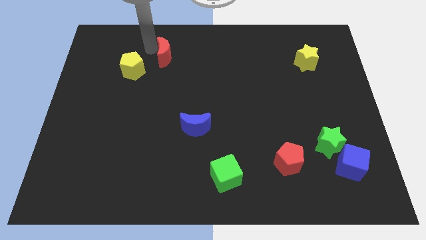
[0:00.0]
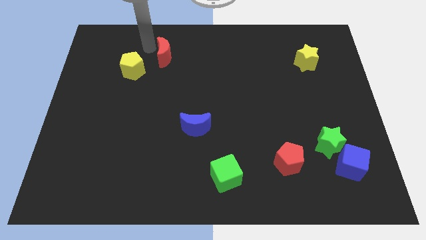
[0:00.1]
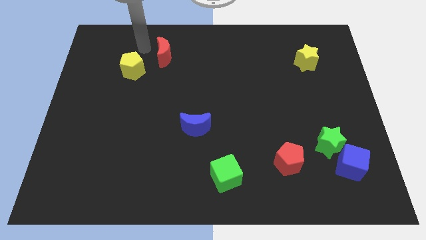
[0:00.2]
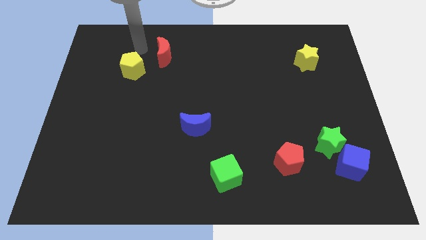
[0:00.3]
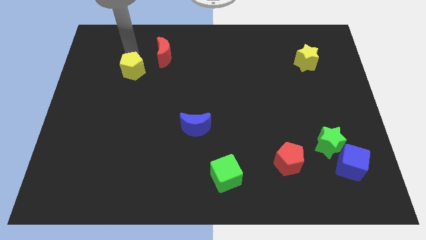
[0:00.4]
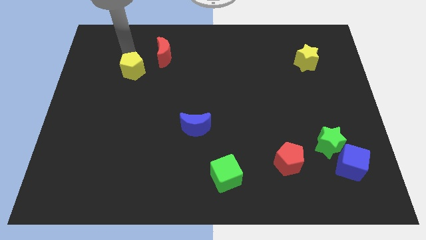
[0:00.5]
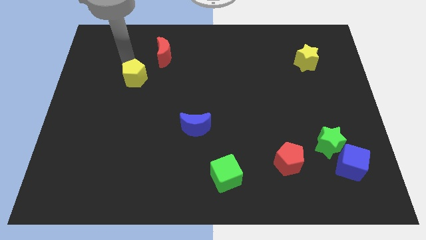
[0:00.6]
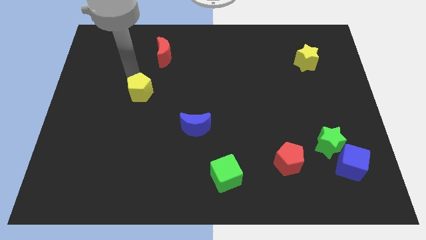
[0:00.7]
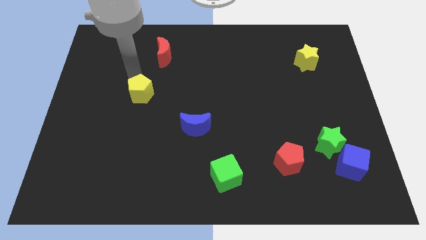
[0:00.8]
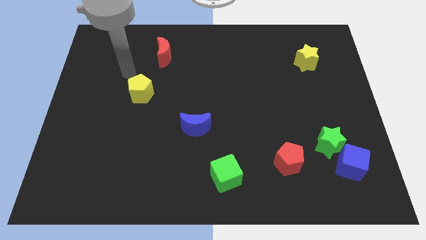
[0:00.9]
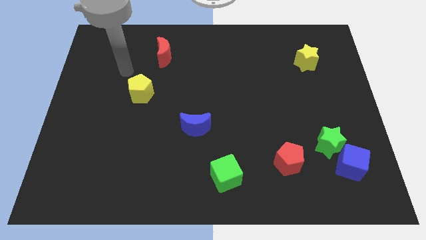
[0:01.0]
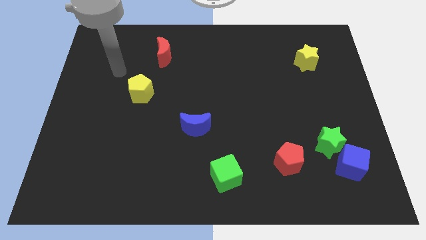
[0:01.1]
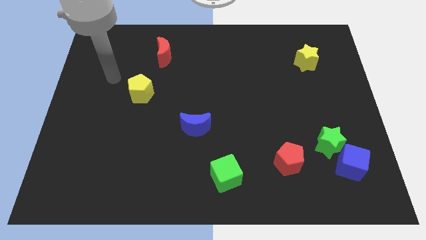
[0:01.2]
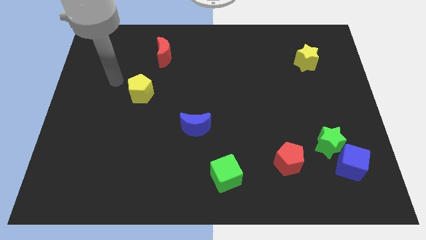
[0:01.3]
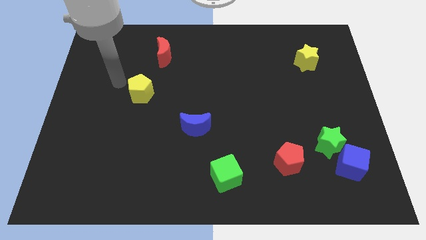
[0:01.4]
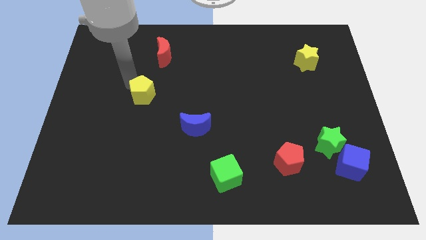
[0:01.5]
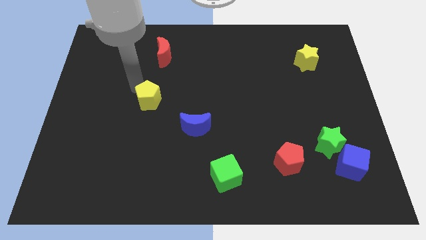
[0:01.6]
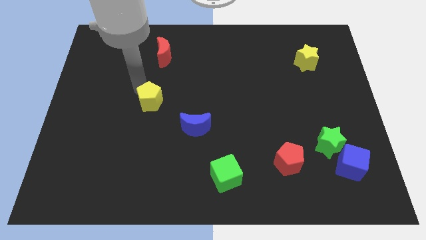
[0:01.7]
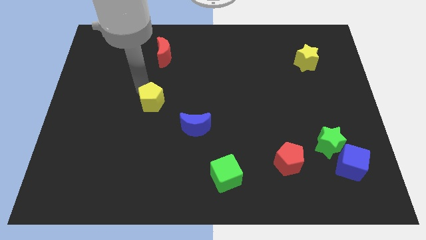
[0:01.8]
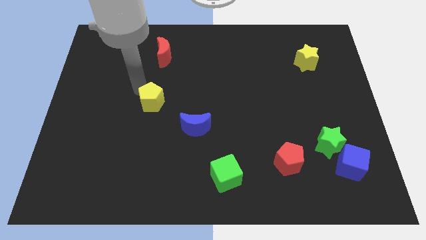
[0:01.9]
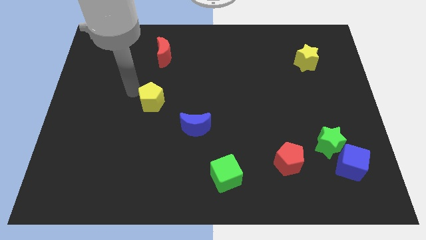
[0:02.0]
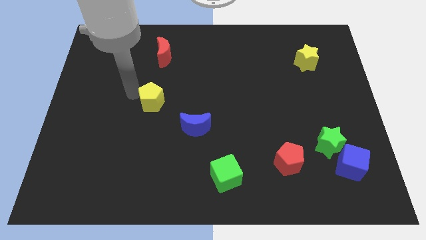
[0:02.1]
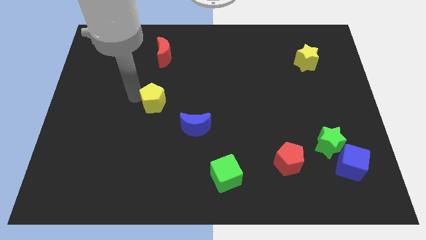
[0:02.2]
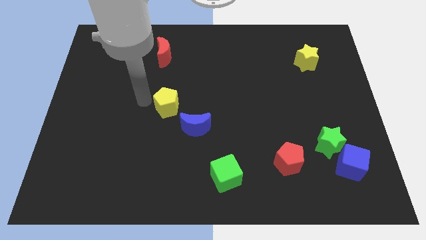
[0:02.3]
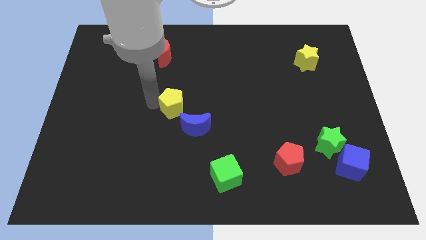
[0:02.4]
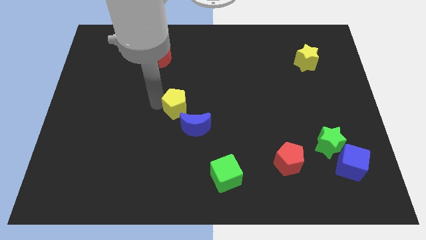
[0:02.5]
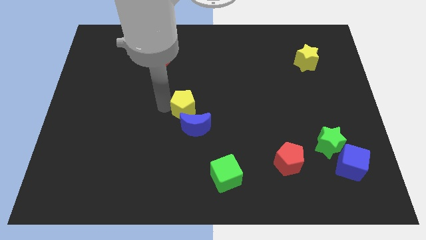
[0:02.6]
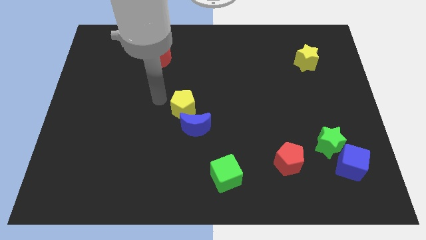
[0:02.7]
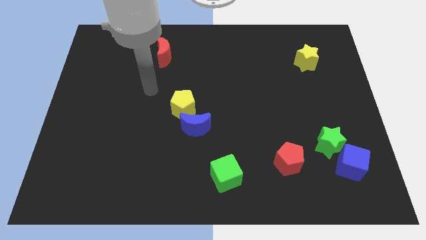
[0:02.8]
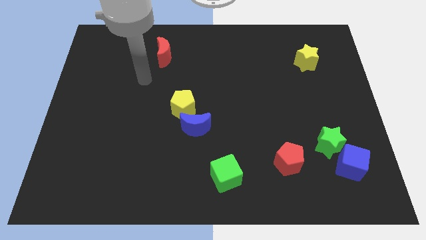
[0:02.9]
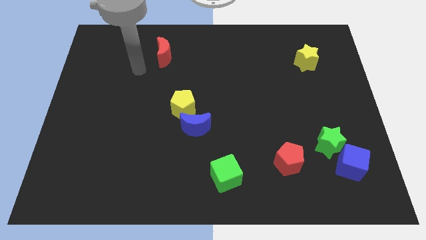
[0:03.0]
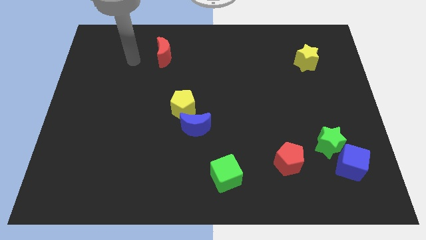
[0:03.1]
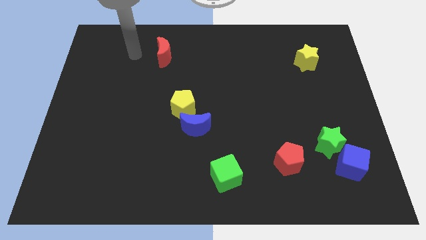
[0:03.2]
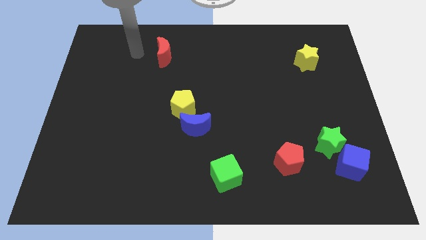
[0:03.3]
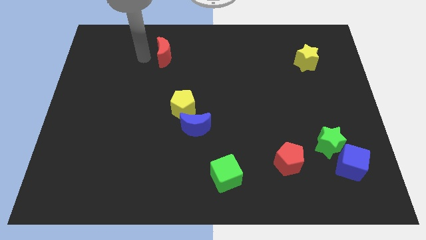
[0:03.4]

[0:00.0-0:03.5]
push yellow pentagon above blue moon

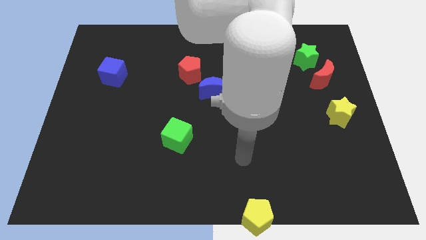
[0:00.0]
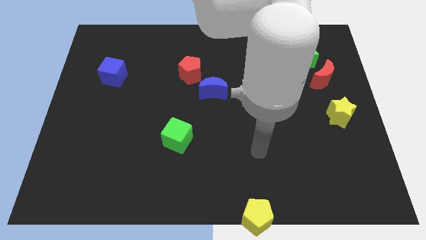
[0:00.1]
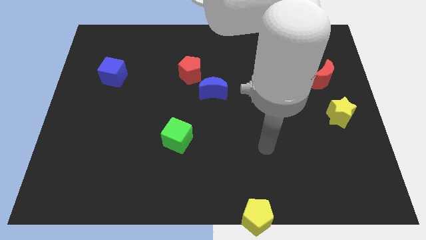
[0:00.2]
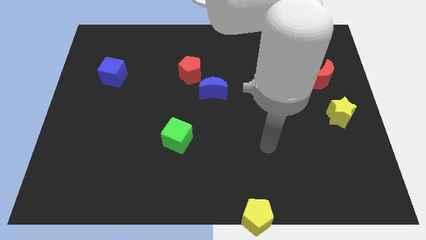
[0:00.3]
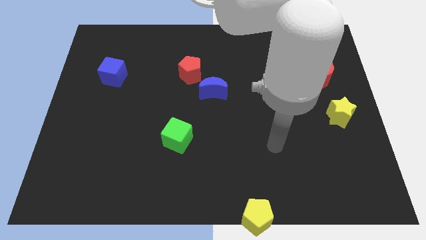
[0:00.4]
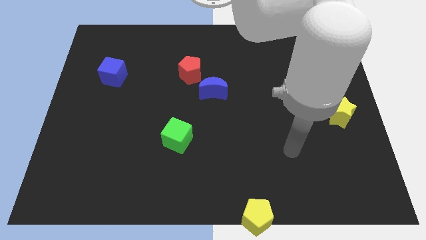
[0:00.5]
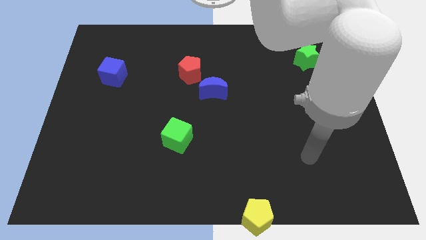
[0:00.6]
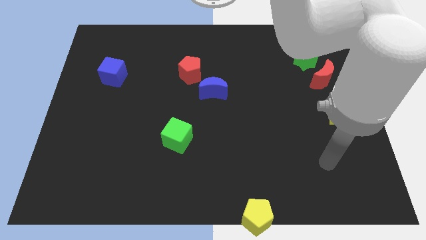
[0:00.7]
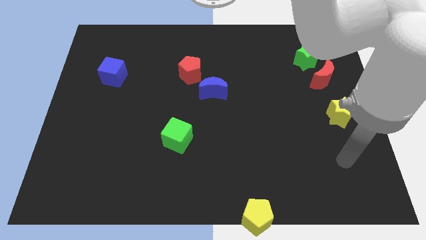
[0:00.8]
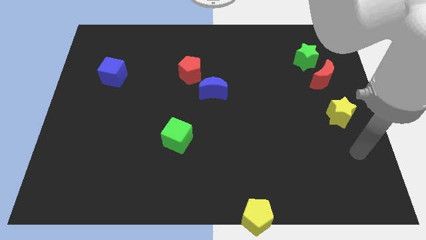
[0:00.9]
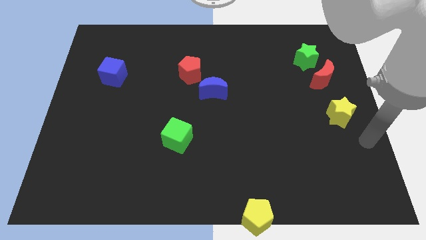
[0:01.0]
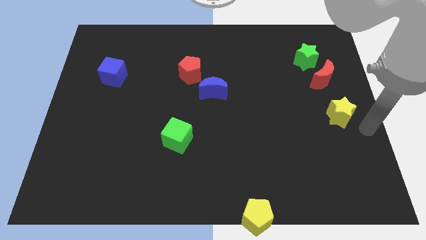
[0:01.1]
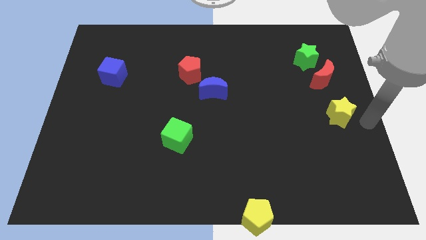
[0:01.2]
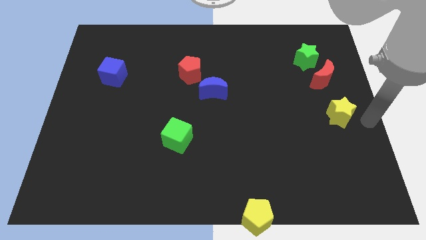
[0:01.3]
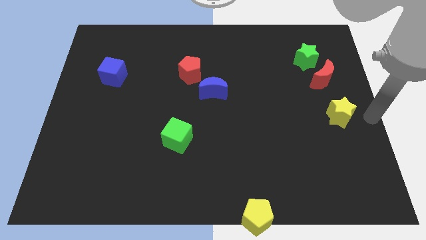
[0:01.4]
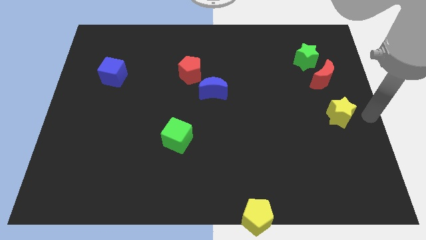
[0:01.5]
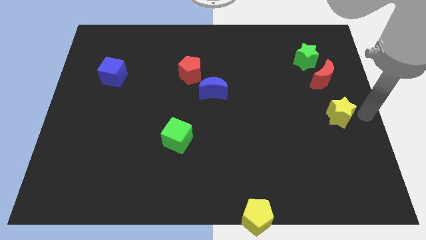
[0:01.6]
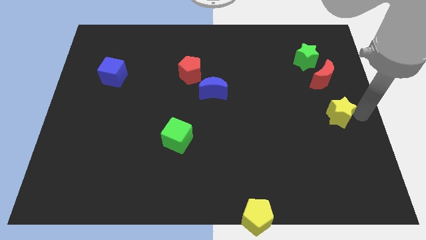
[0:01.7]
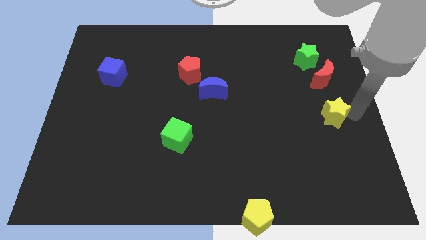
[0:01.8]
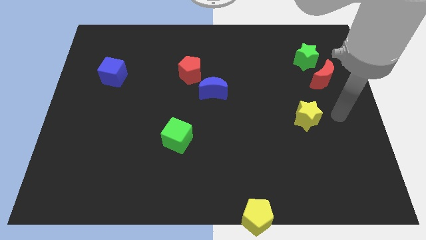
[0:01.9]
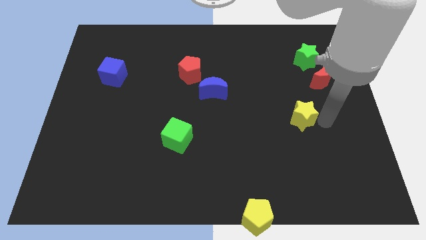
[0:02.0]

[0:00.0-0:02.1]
push yellow star to its left

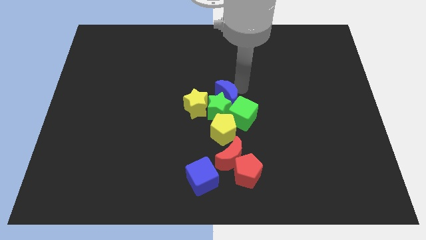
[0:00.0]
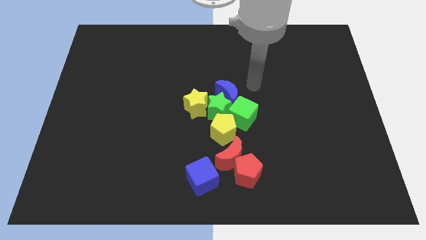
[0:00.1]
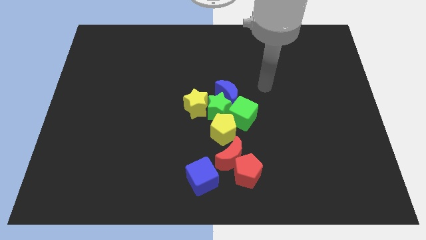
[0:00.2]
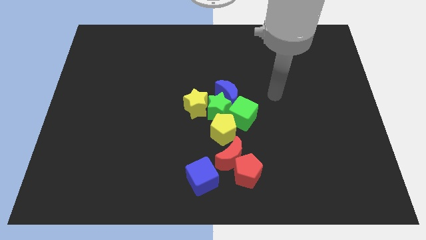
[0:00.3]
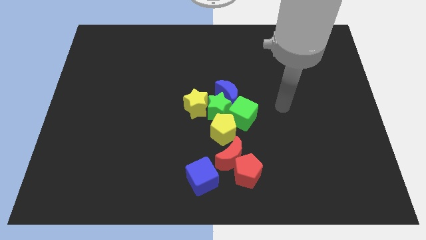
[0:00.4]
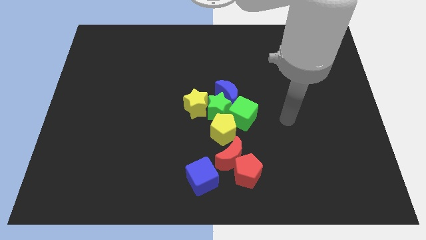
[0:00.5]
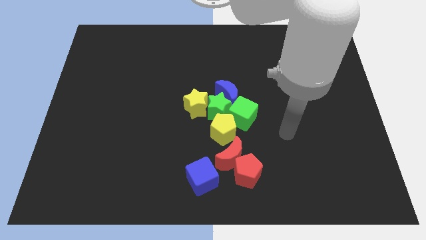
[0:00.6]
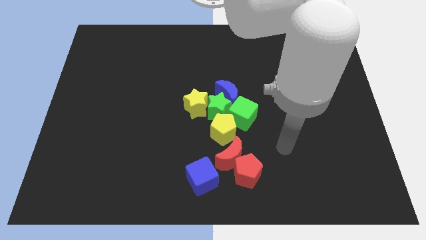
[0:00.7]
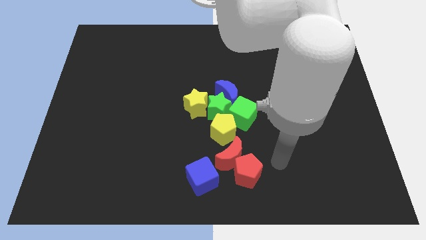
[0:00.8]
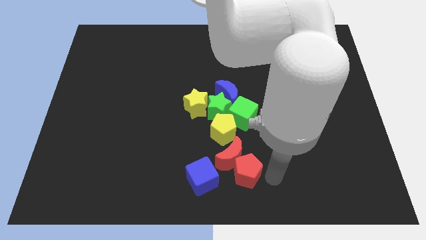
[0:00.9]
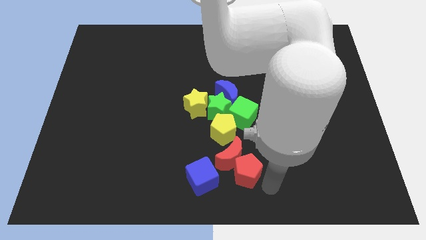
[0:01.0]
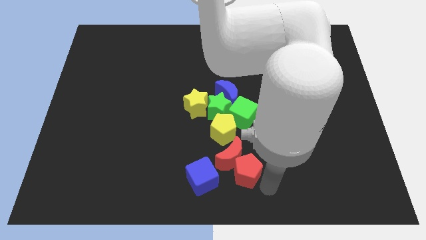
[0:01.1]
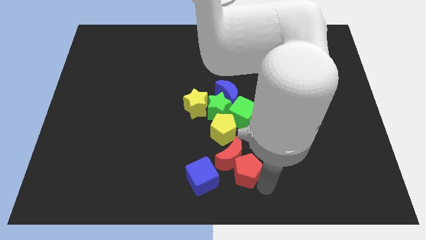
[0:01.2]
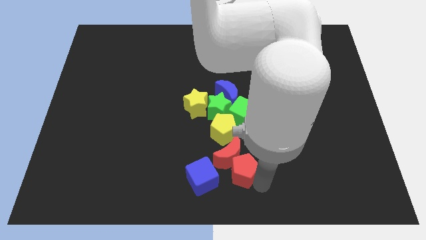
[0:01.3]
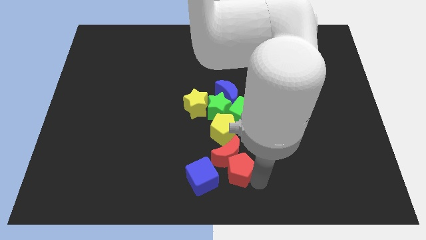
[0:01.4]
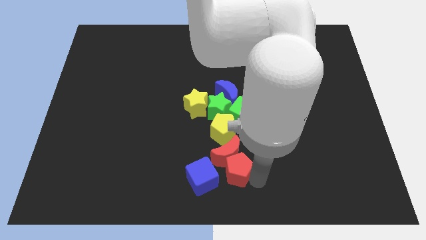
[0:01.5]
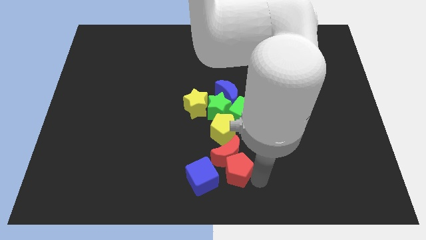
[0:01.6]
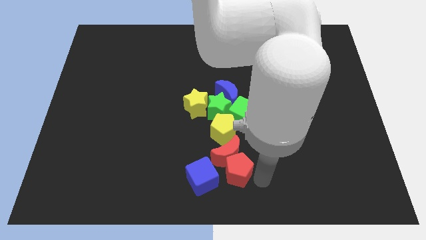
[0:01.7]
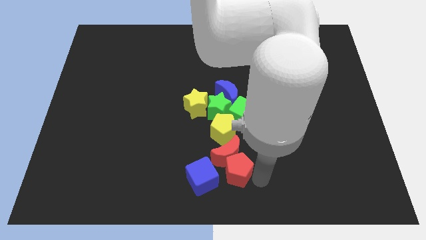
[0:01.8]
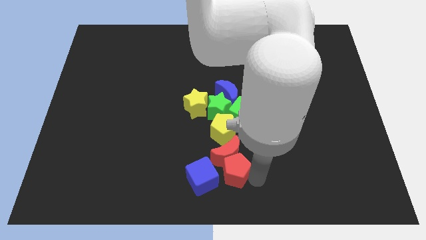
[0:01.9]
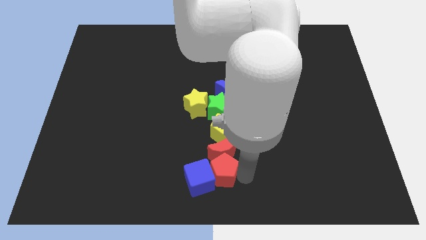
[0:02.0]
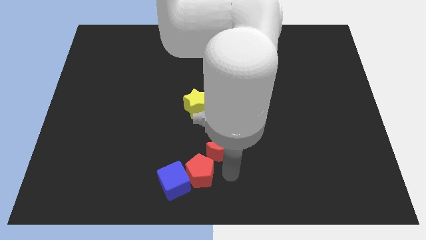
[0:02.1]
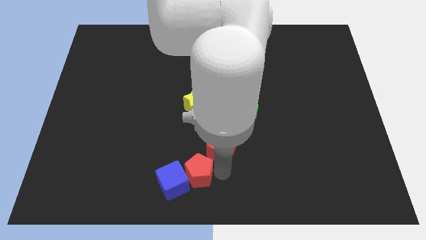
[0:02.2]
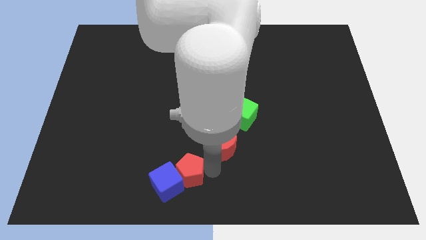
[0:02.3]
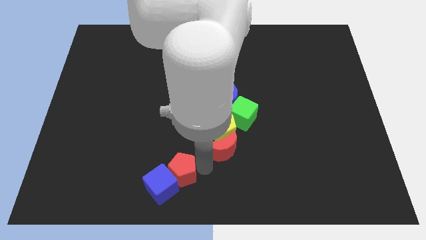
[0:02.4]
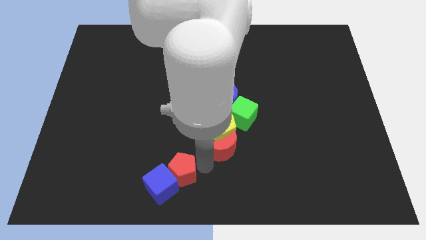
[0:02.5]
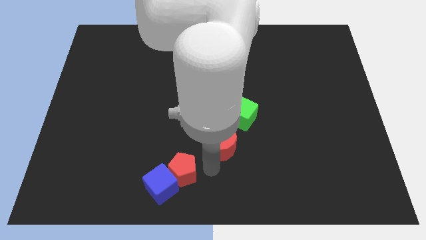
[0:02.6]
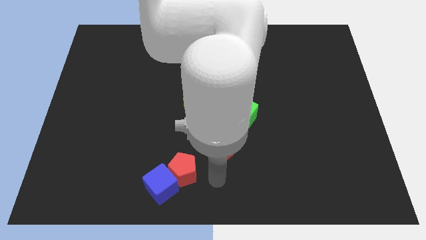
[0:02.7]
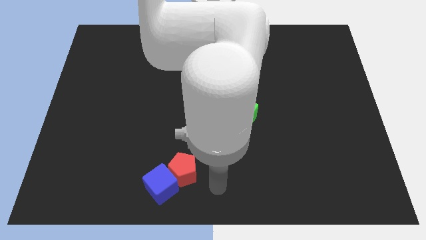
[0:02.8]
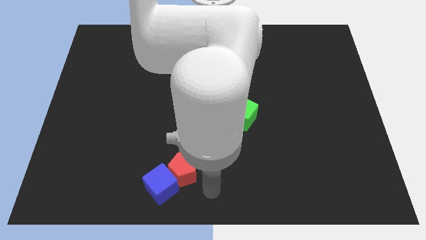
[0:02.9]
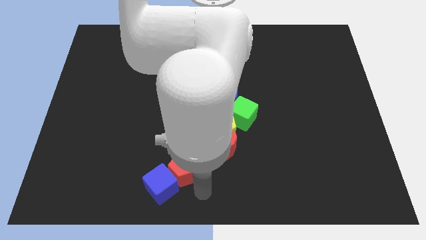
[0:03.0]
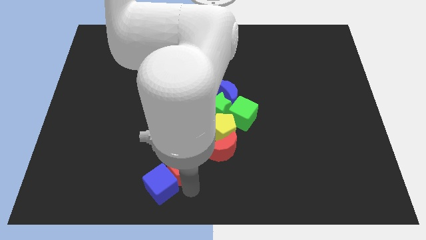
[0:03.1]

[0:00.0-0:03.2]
push the red pentagon and blue cube together slightly to the left side of the board
